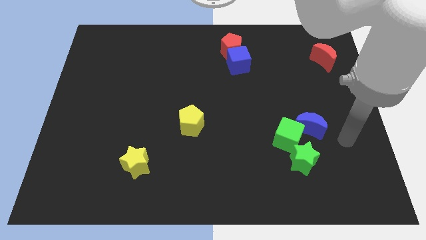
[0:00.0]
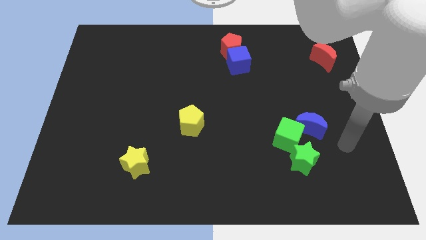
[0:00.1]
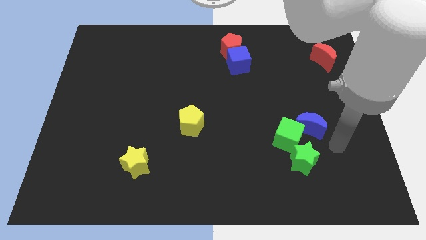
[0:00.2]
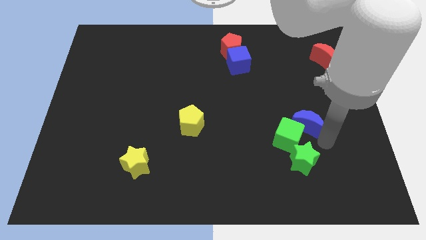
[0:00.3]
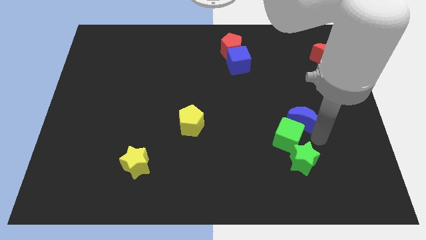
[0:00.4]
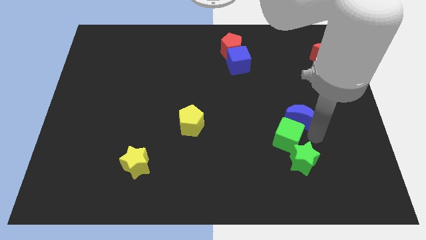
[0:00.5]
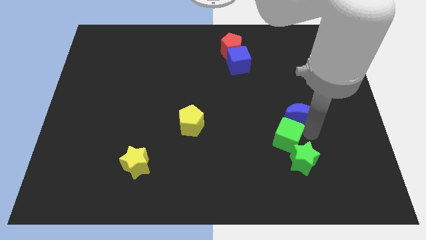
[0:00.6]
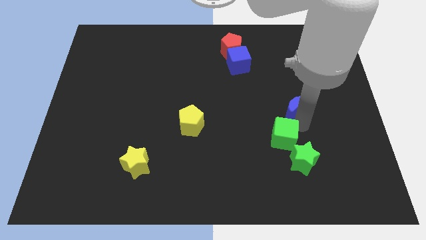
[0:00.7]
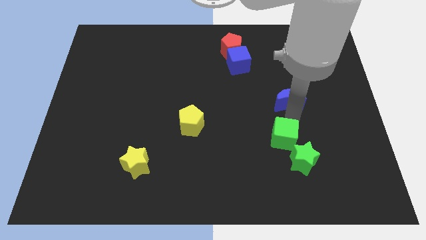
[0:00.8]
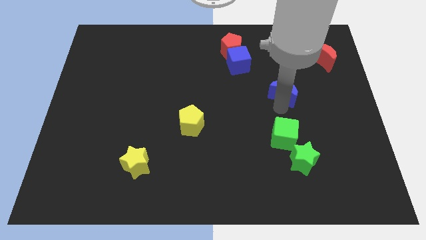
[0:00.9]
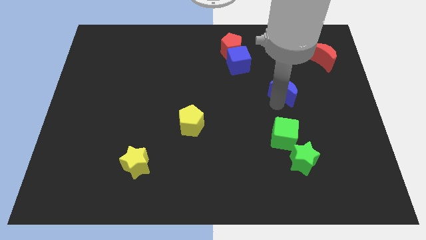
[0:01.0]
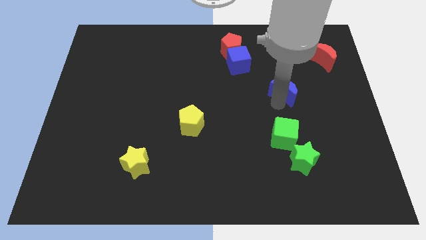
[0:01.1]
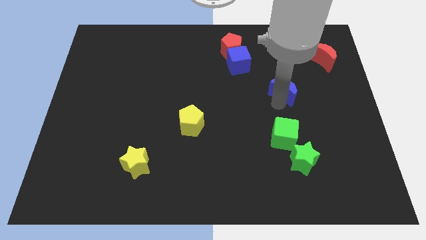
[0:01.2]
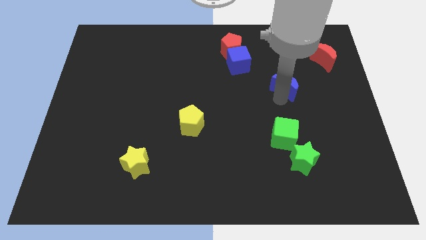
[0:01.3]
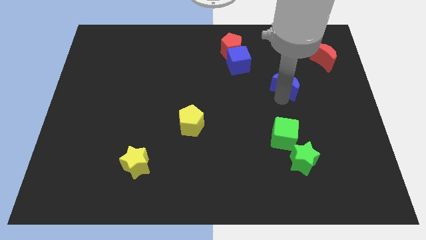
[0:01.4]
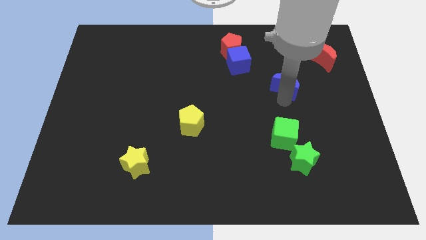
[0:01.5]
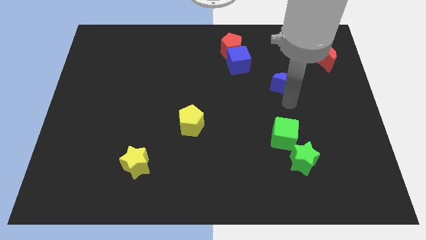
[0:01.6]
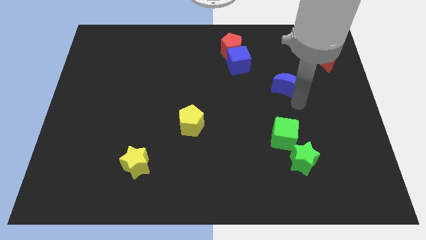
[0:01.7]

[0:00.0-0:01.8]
place the blue moon above the green cube

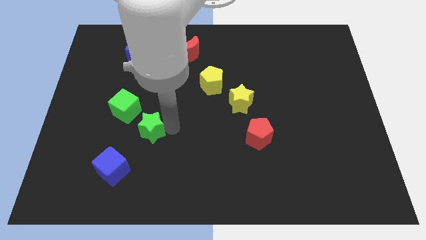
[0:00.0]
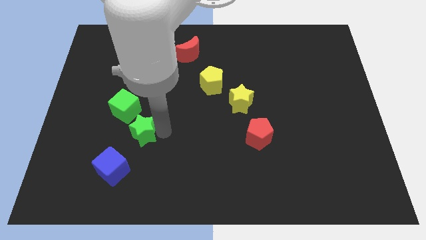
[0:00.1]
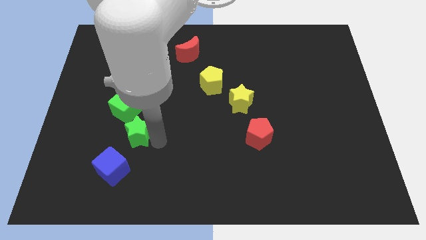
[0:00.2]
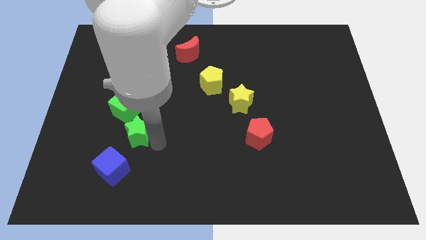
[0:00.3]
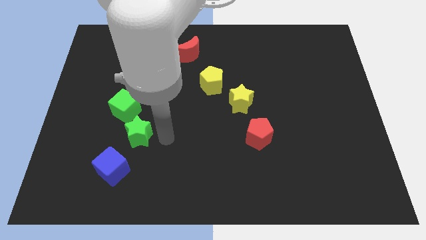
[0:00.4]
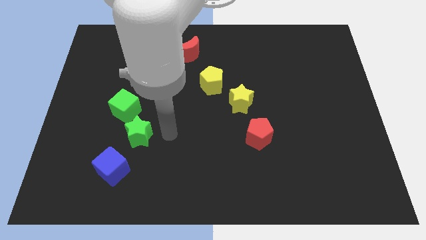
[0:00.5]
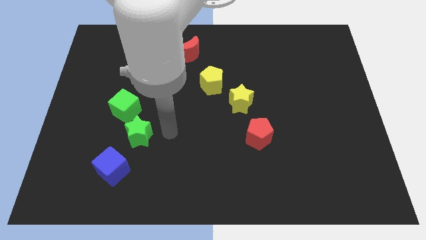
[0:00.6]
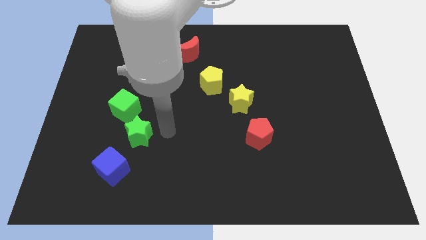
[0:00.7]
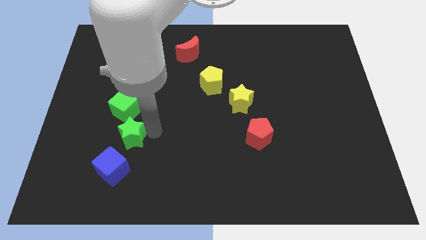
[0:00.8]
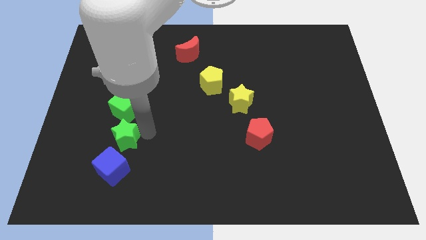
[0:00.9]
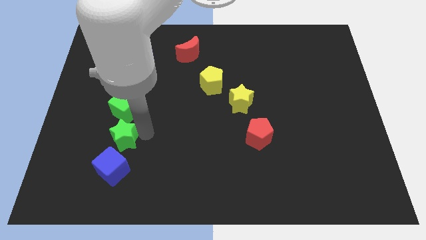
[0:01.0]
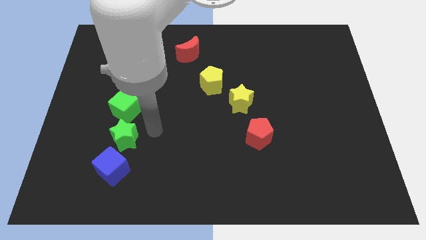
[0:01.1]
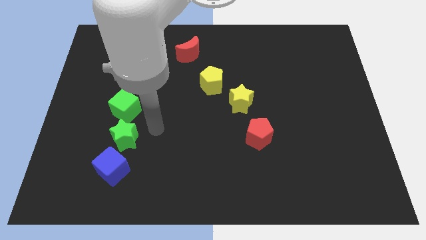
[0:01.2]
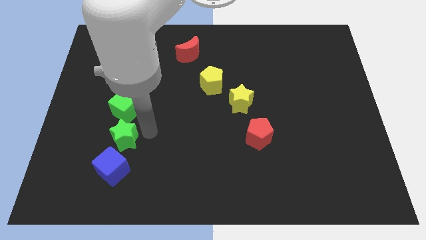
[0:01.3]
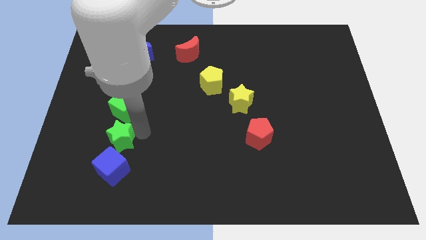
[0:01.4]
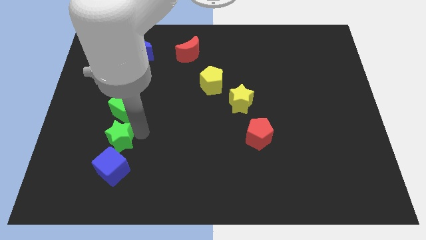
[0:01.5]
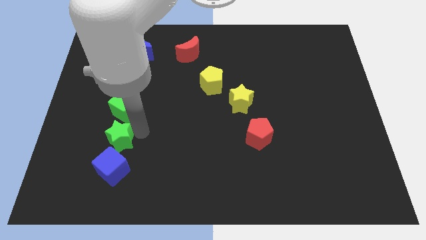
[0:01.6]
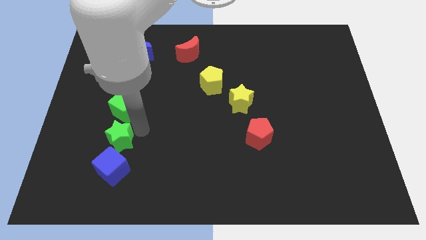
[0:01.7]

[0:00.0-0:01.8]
move the green star in between the green cube and blue cube

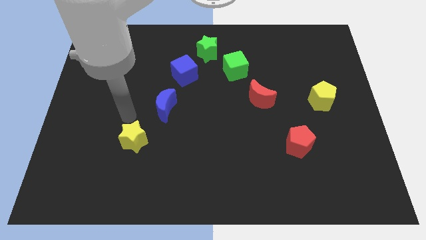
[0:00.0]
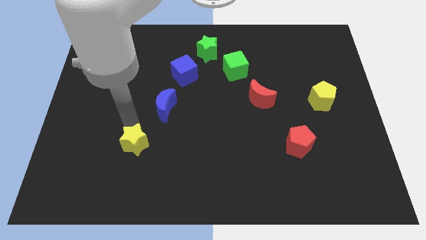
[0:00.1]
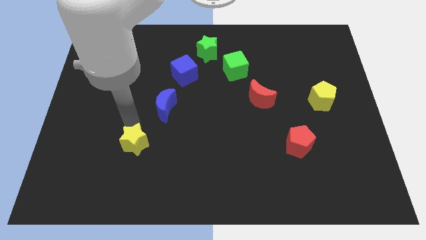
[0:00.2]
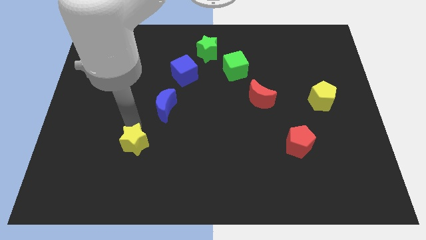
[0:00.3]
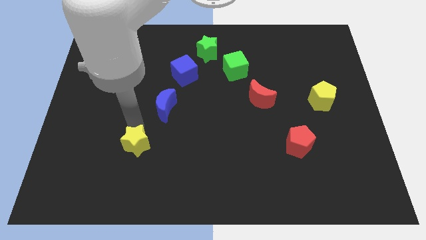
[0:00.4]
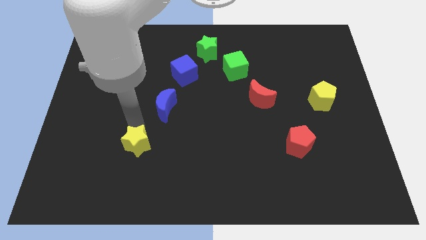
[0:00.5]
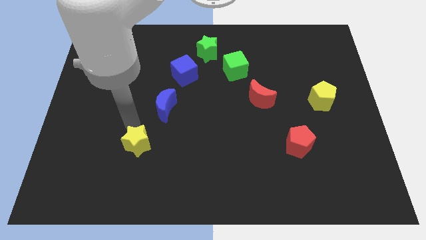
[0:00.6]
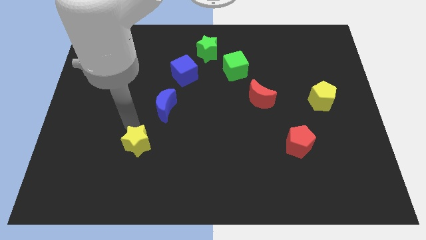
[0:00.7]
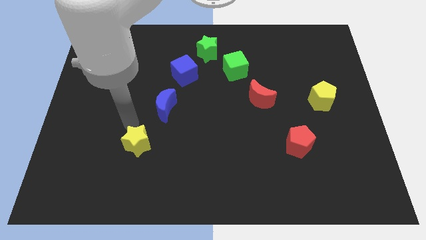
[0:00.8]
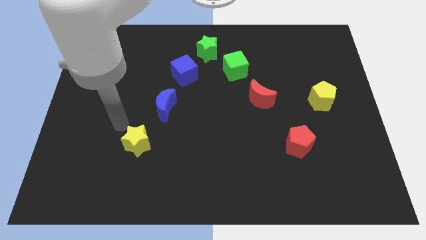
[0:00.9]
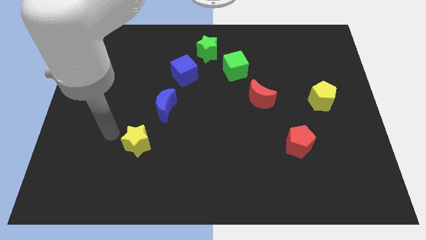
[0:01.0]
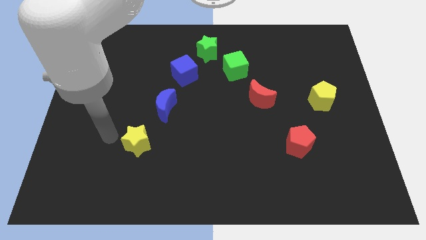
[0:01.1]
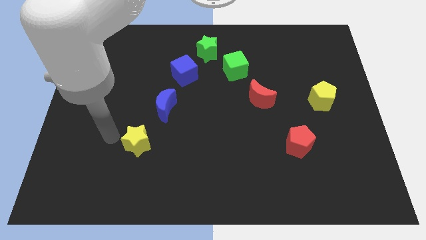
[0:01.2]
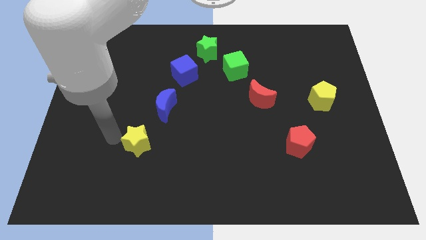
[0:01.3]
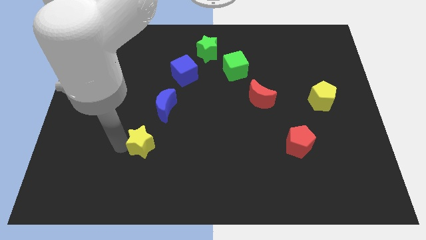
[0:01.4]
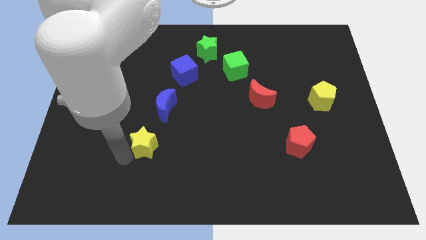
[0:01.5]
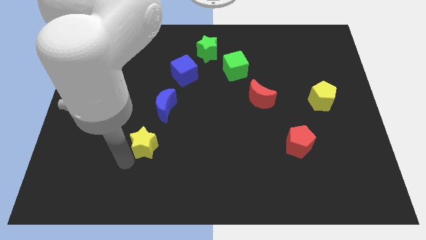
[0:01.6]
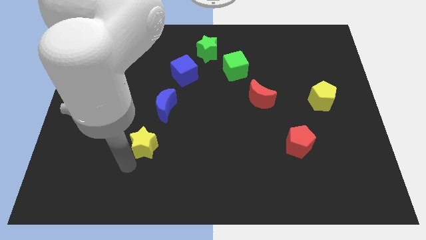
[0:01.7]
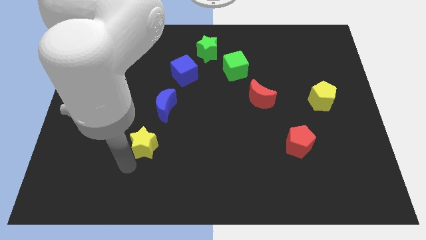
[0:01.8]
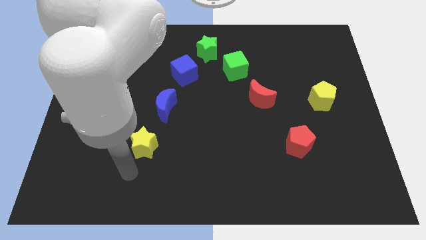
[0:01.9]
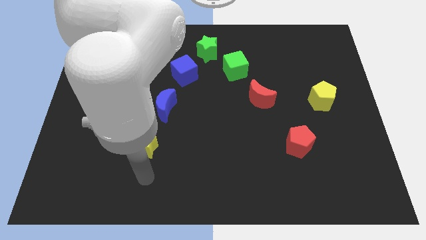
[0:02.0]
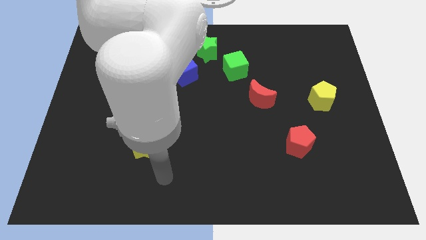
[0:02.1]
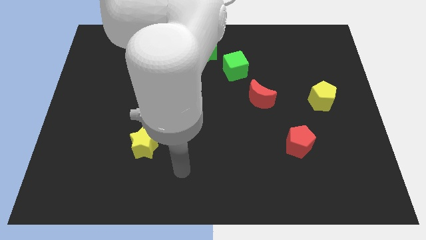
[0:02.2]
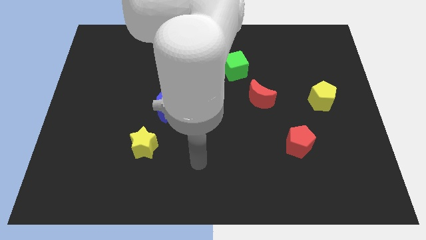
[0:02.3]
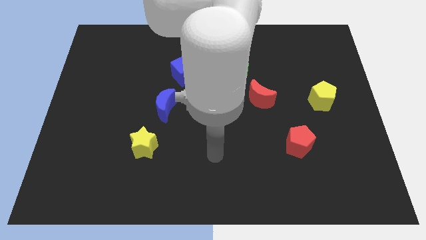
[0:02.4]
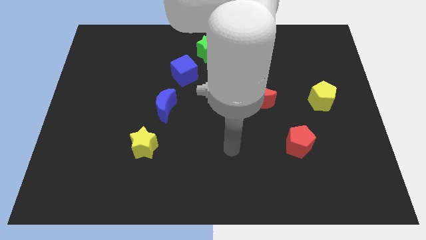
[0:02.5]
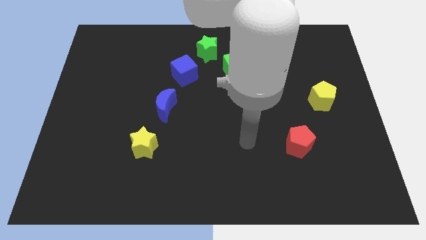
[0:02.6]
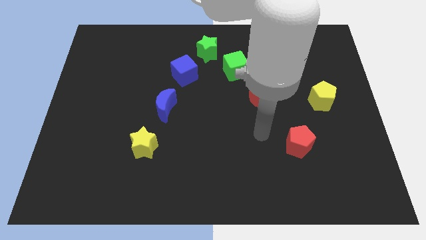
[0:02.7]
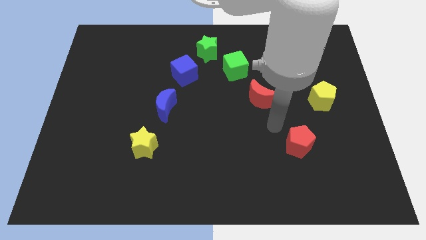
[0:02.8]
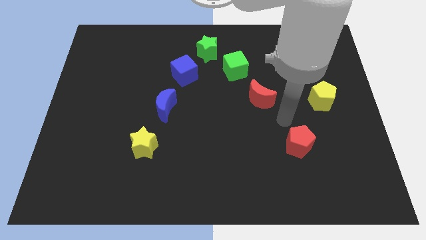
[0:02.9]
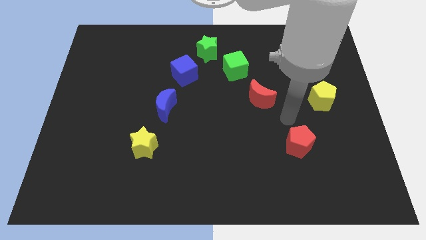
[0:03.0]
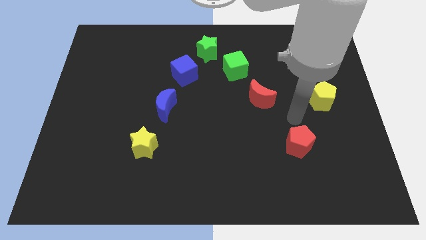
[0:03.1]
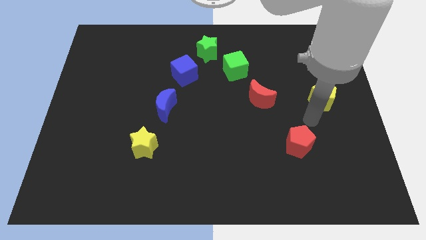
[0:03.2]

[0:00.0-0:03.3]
slightly move the yellow star to the right side

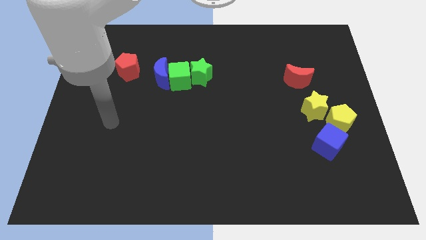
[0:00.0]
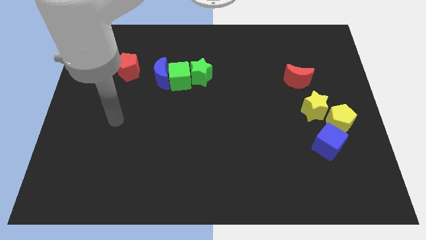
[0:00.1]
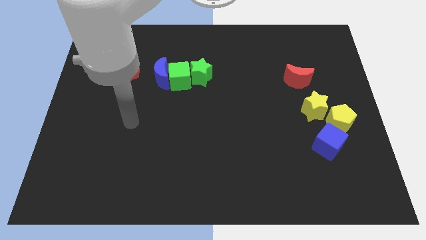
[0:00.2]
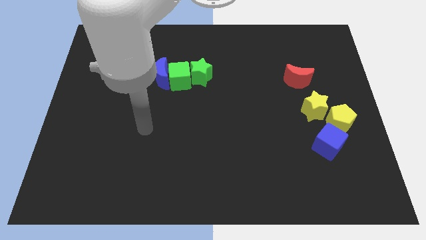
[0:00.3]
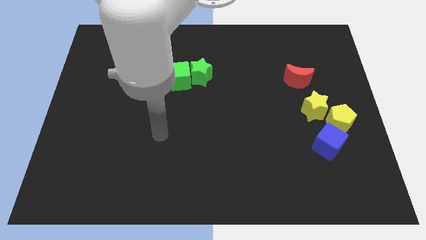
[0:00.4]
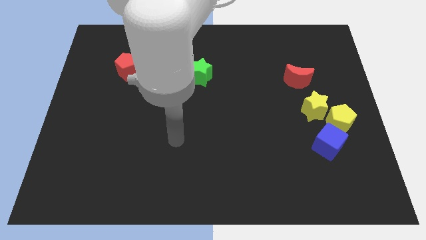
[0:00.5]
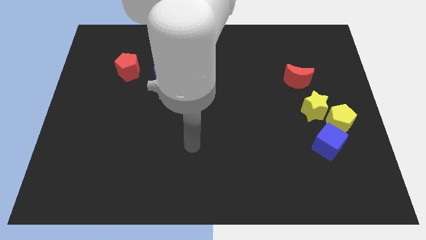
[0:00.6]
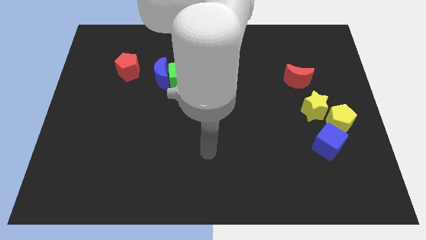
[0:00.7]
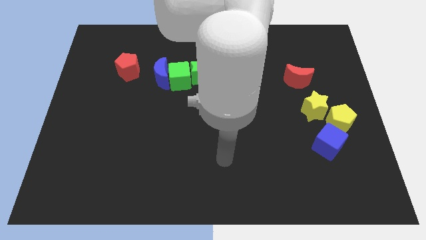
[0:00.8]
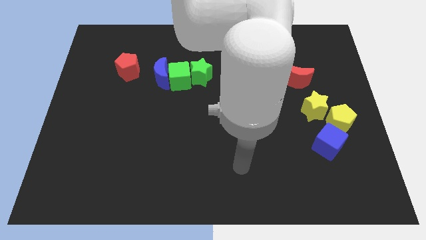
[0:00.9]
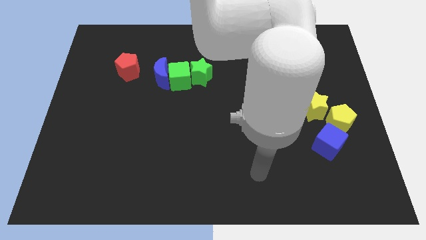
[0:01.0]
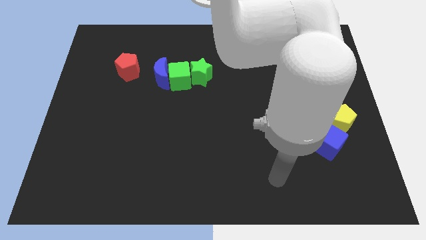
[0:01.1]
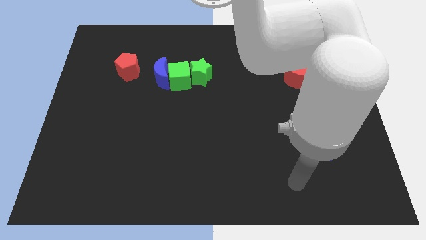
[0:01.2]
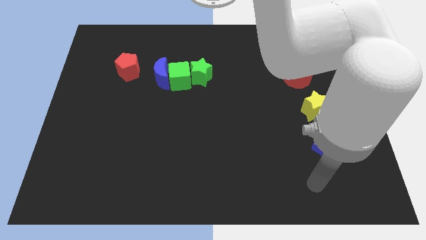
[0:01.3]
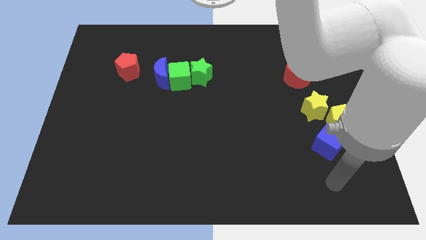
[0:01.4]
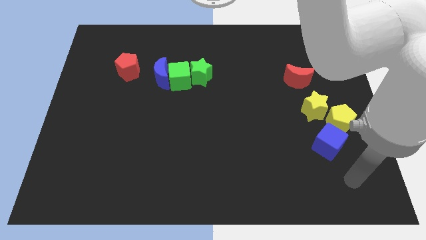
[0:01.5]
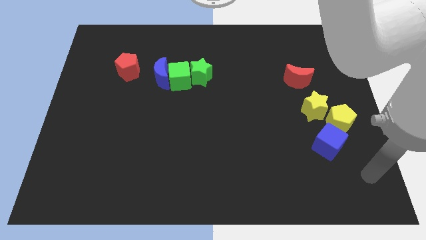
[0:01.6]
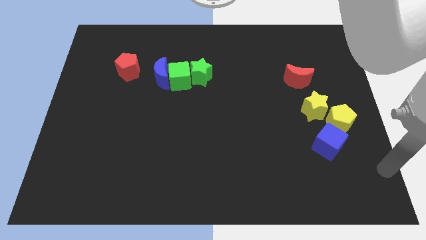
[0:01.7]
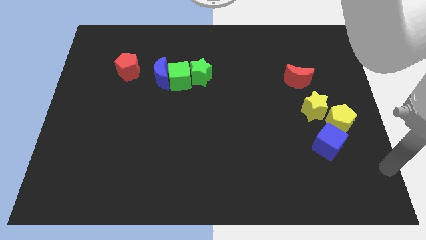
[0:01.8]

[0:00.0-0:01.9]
move your arm to the bottom right of the board

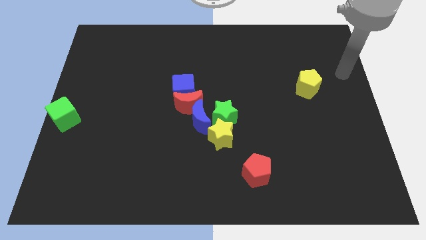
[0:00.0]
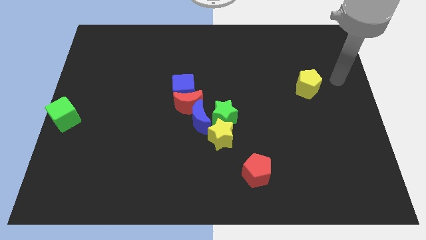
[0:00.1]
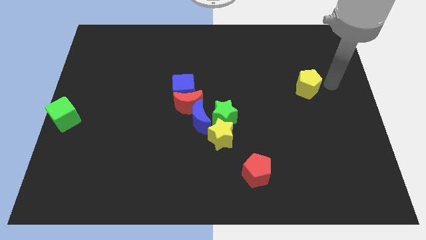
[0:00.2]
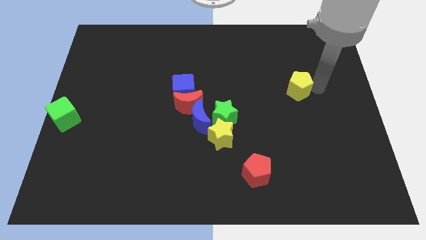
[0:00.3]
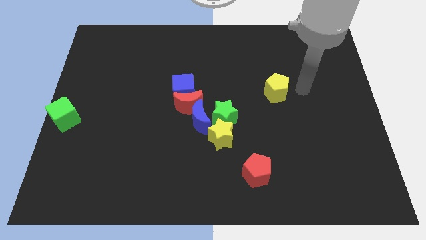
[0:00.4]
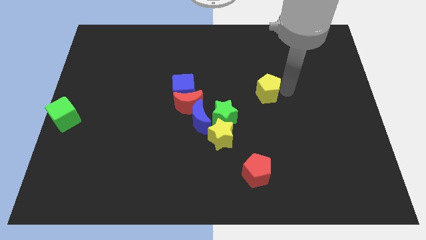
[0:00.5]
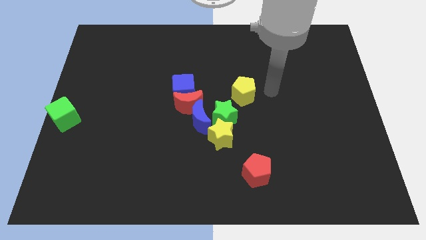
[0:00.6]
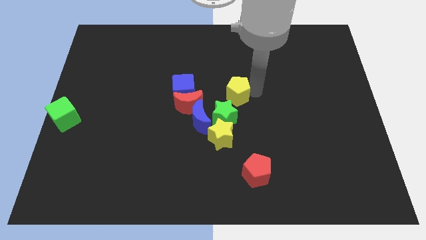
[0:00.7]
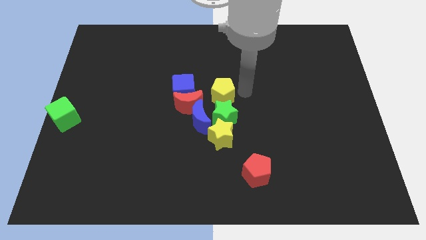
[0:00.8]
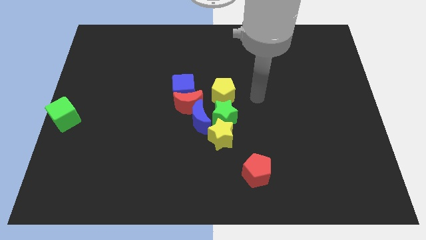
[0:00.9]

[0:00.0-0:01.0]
put the yellow pentagon above the green star
